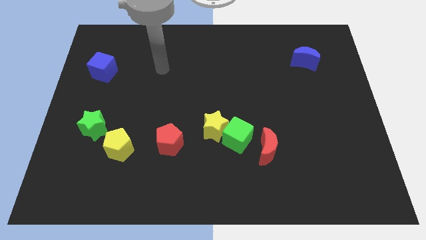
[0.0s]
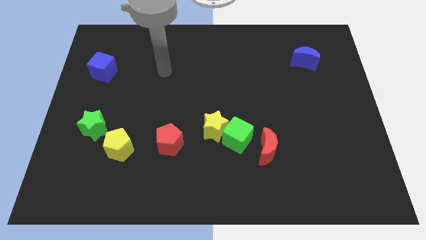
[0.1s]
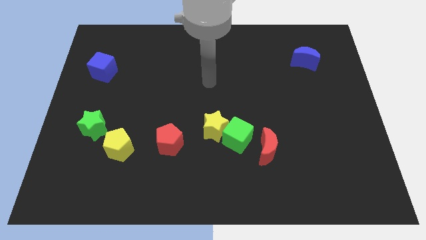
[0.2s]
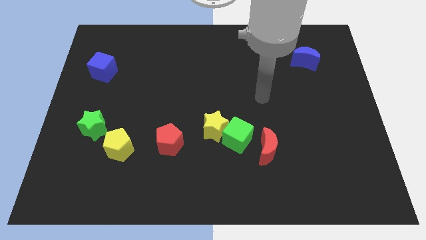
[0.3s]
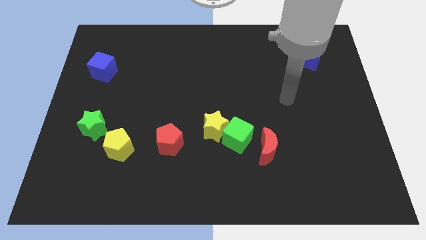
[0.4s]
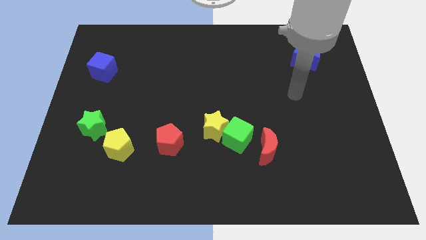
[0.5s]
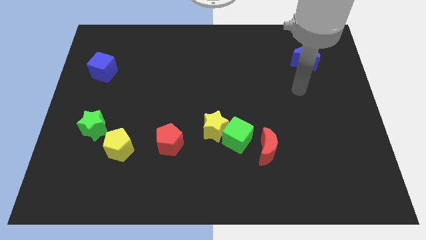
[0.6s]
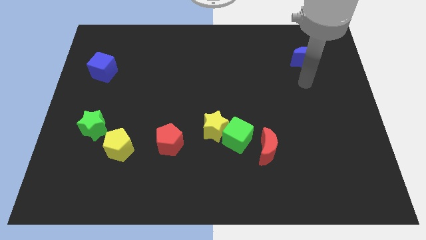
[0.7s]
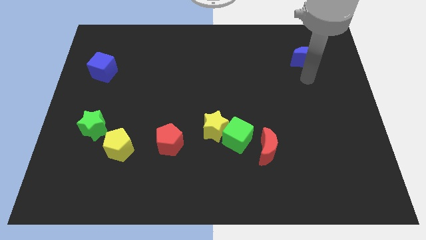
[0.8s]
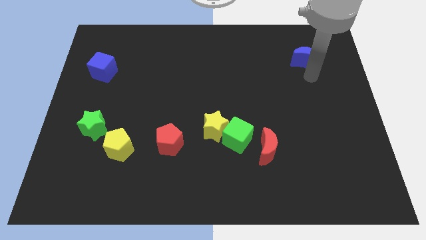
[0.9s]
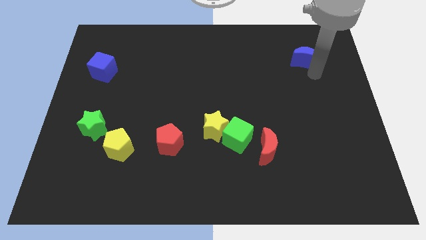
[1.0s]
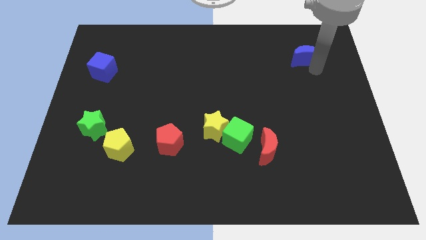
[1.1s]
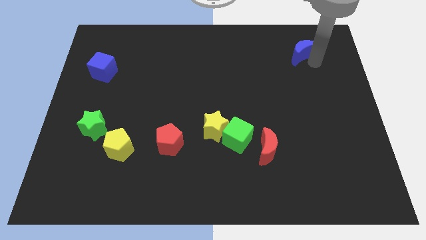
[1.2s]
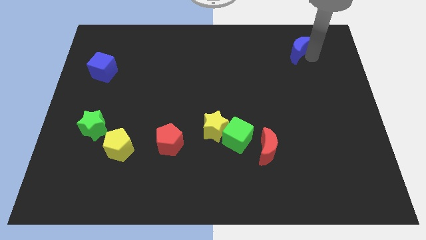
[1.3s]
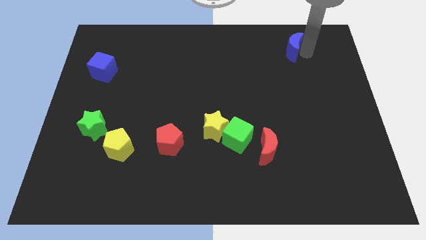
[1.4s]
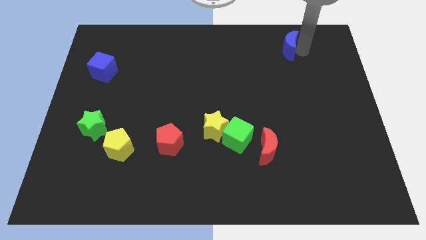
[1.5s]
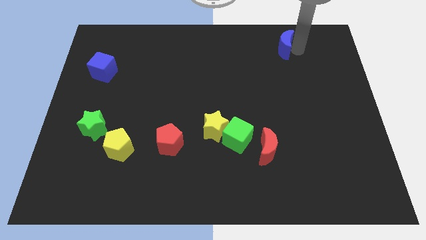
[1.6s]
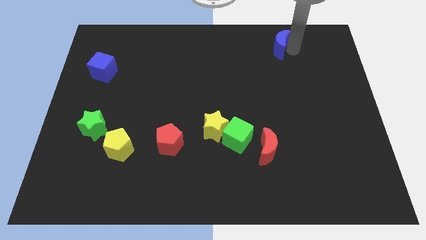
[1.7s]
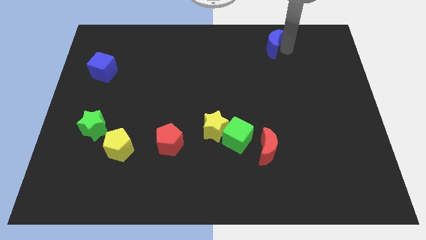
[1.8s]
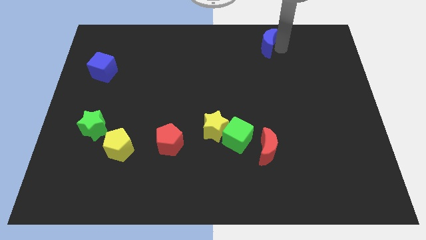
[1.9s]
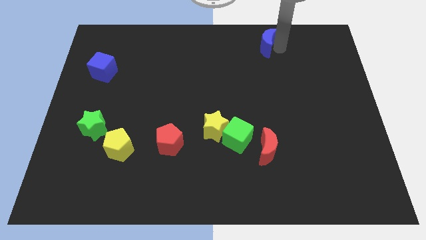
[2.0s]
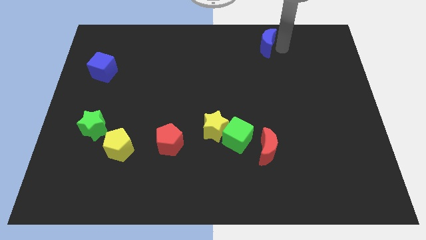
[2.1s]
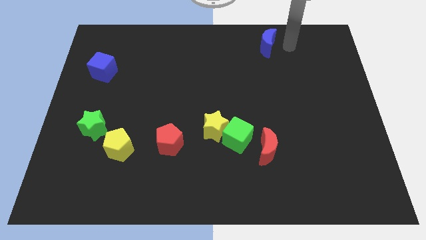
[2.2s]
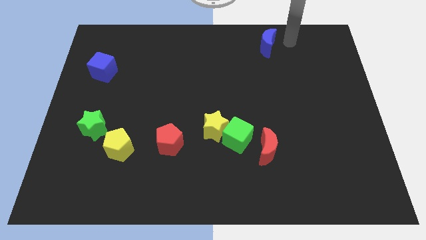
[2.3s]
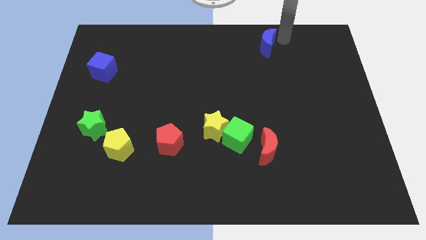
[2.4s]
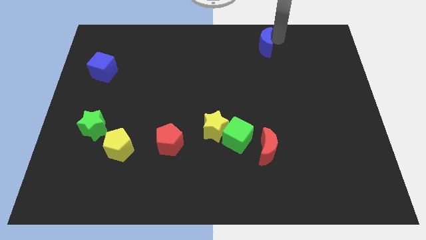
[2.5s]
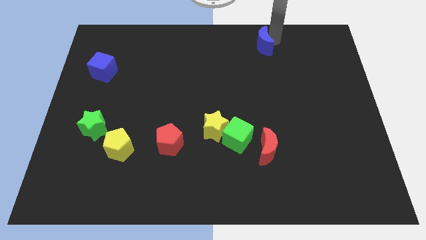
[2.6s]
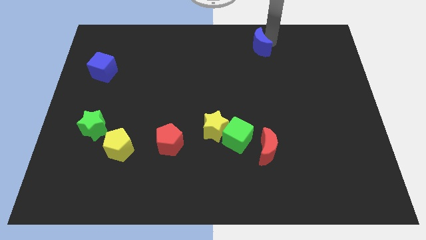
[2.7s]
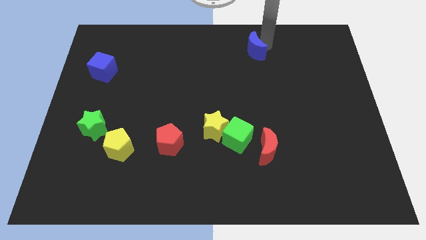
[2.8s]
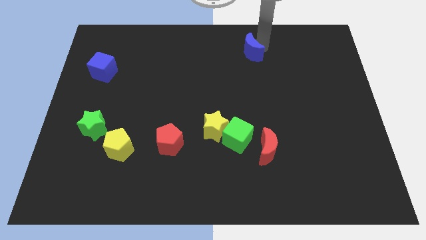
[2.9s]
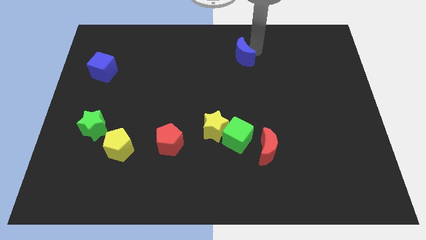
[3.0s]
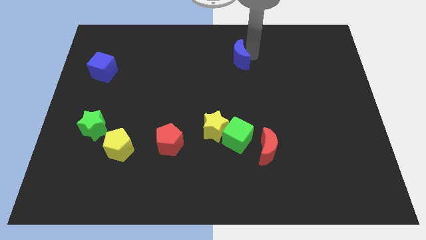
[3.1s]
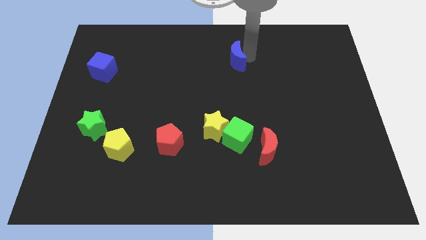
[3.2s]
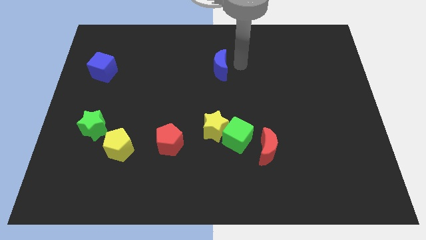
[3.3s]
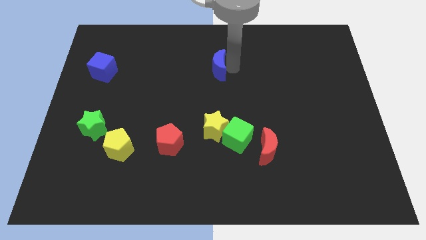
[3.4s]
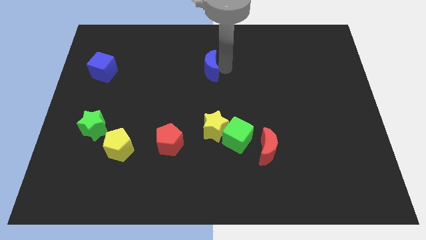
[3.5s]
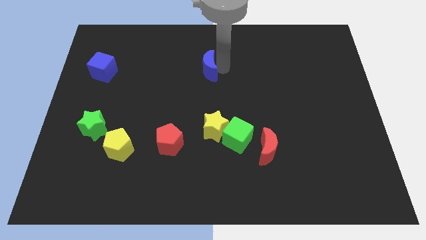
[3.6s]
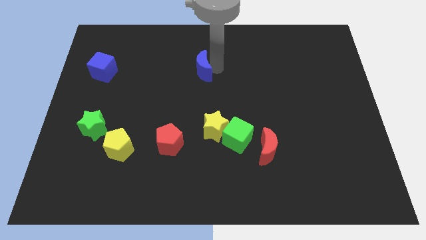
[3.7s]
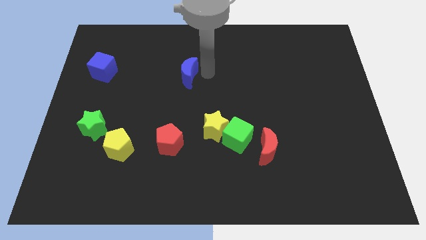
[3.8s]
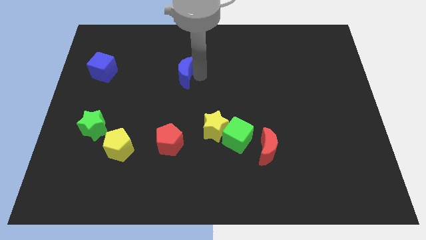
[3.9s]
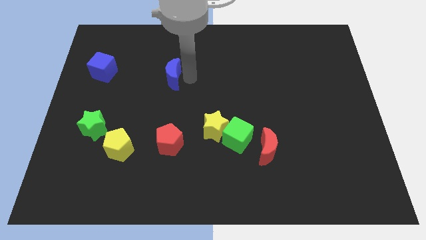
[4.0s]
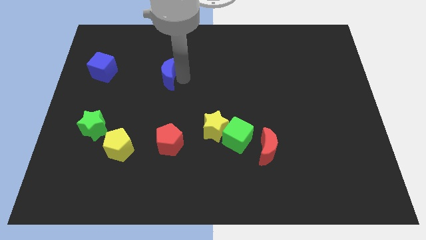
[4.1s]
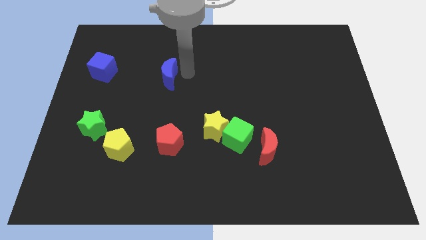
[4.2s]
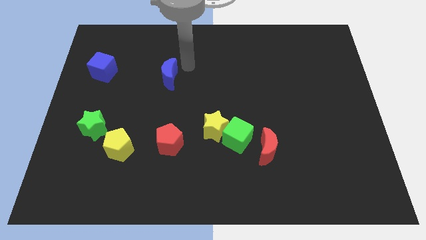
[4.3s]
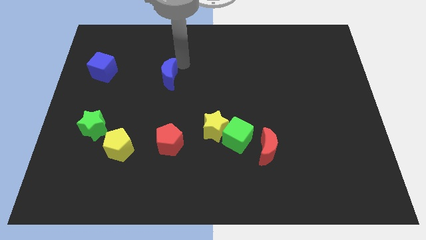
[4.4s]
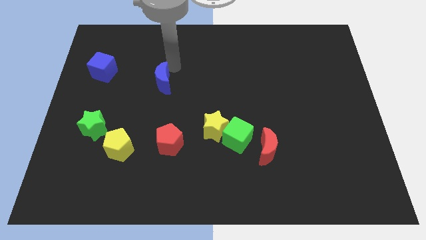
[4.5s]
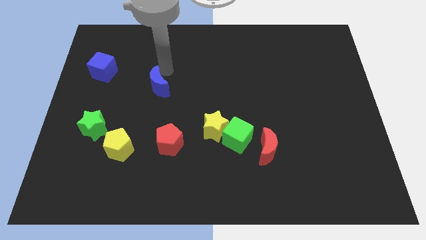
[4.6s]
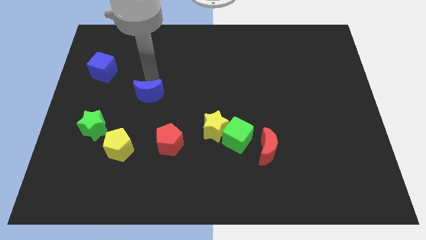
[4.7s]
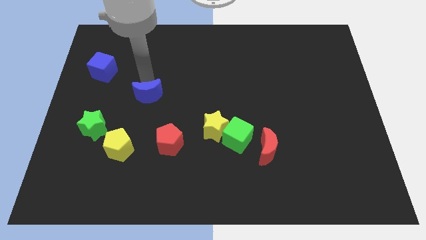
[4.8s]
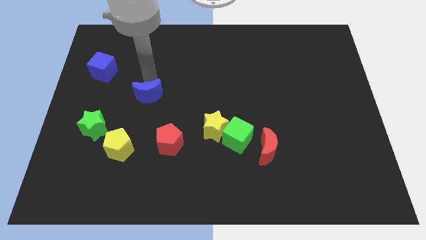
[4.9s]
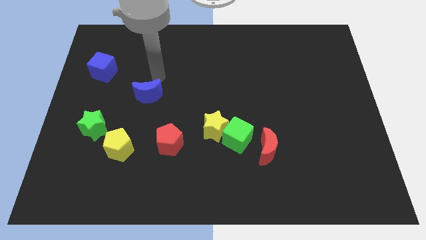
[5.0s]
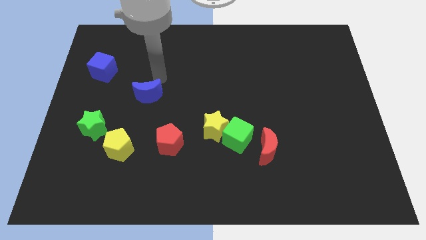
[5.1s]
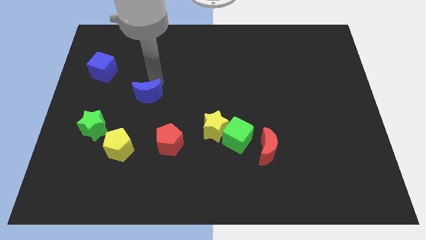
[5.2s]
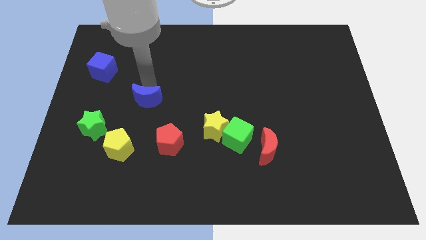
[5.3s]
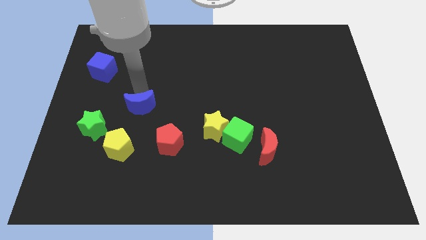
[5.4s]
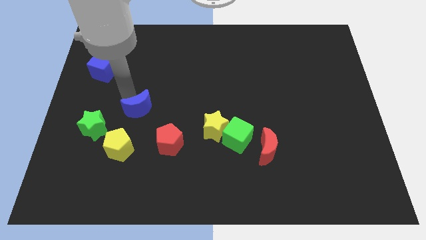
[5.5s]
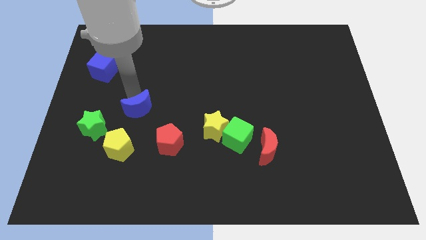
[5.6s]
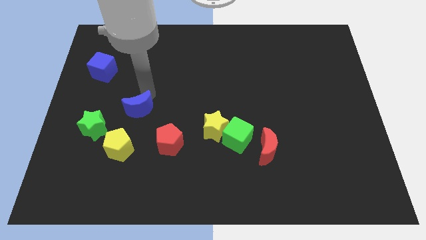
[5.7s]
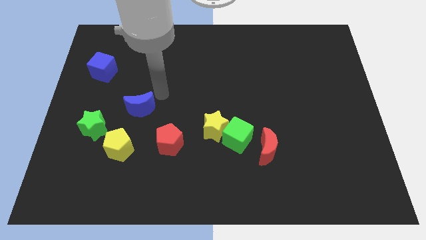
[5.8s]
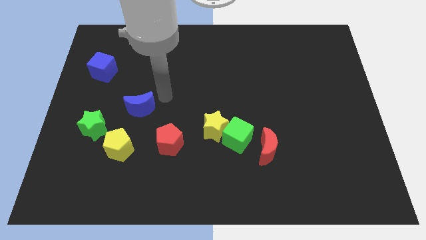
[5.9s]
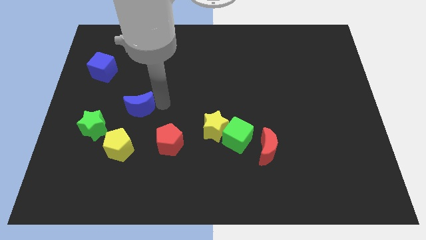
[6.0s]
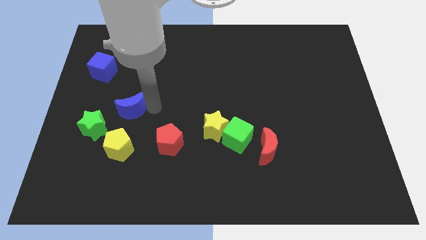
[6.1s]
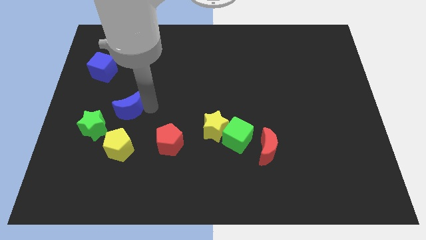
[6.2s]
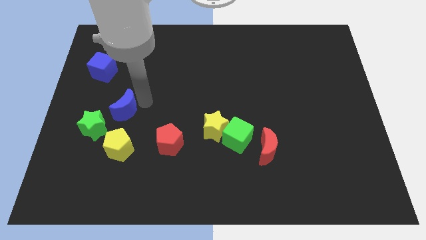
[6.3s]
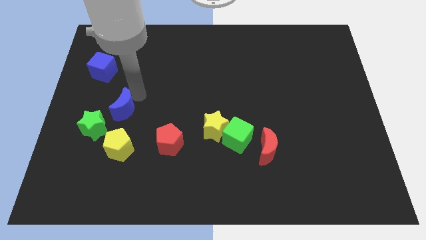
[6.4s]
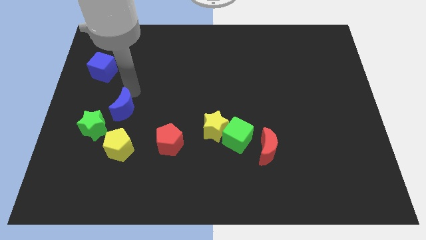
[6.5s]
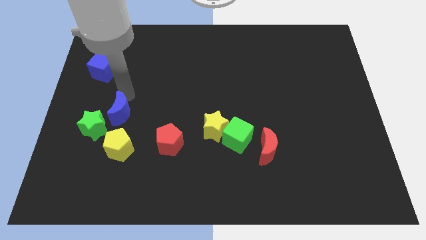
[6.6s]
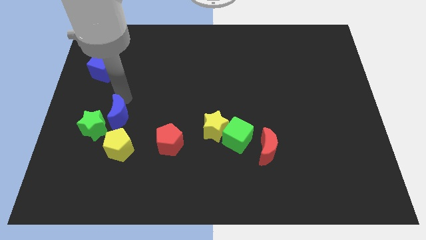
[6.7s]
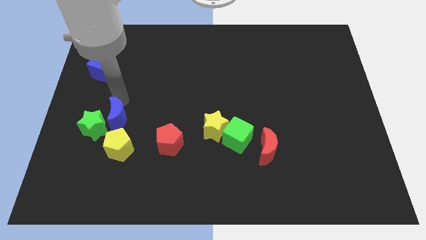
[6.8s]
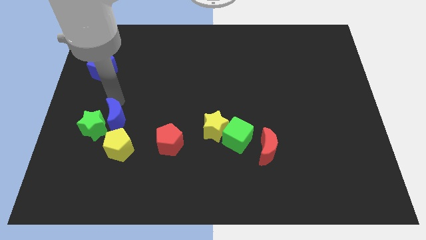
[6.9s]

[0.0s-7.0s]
put the blue moon towards the green star

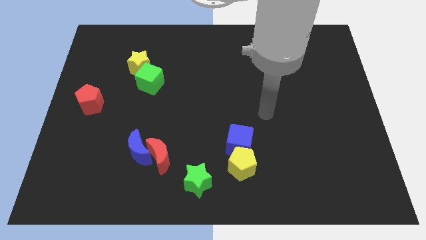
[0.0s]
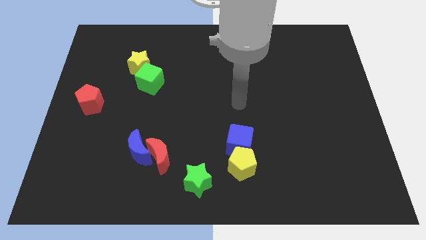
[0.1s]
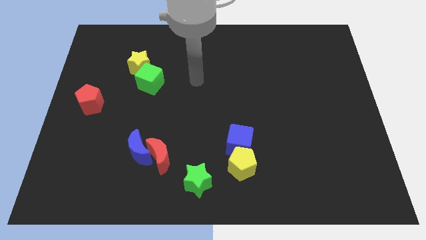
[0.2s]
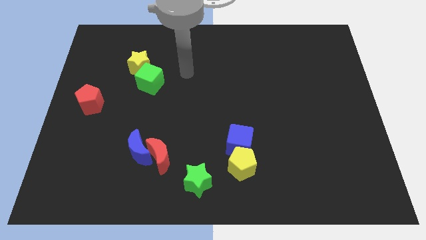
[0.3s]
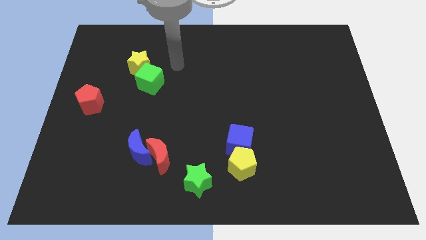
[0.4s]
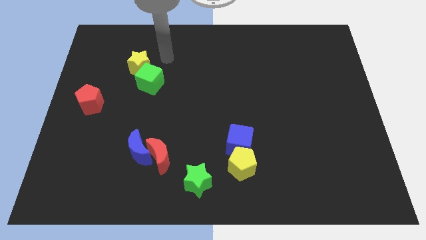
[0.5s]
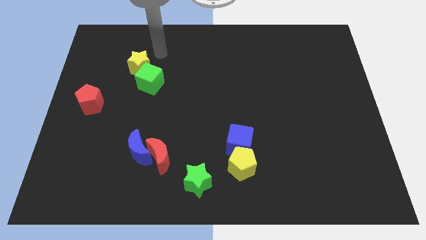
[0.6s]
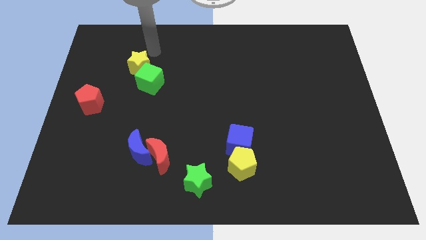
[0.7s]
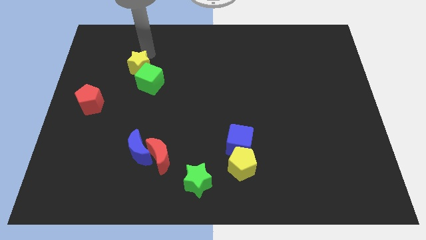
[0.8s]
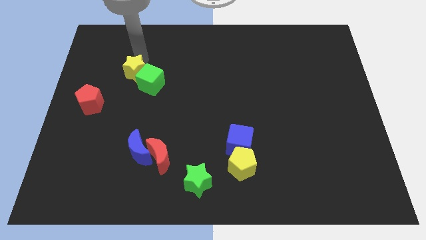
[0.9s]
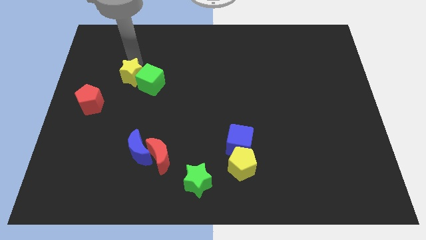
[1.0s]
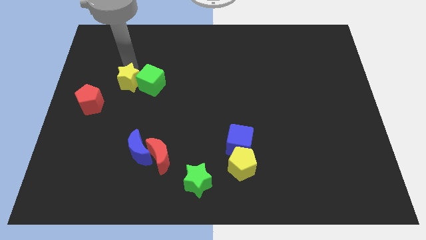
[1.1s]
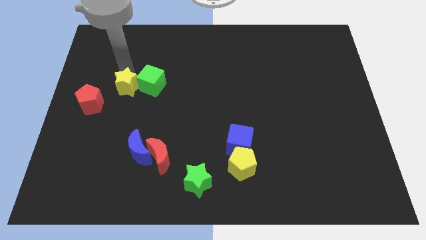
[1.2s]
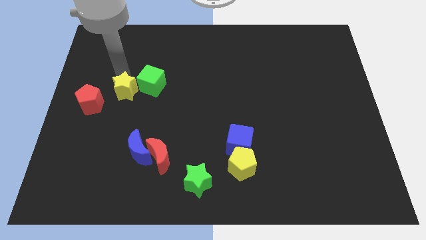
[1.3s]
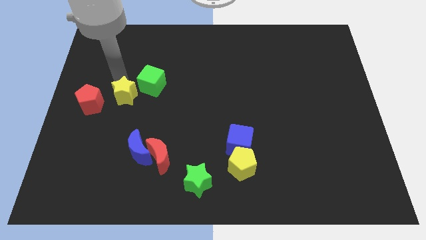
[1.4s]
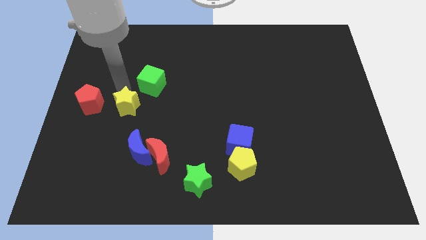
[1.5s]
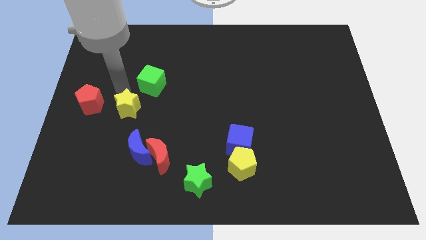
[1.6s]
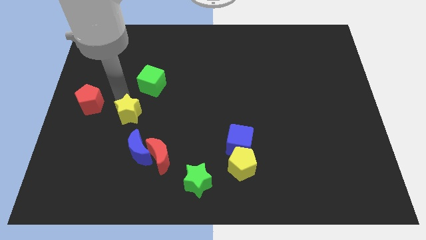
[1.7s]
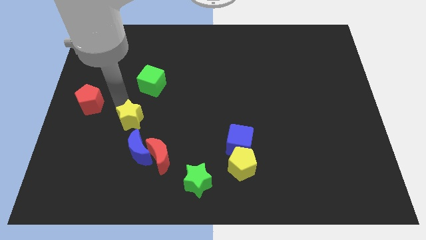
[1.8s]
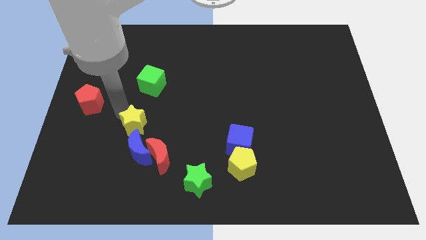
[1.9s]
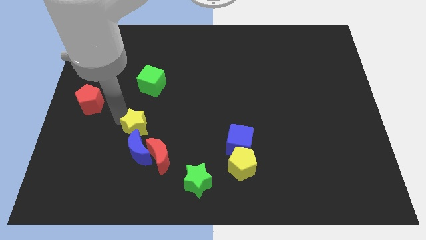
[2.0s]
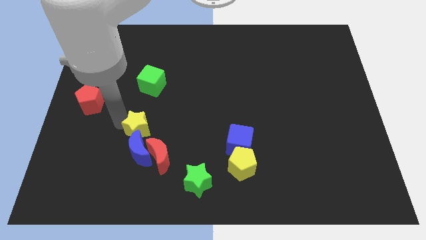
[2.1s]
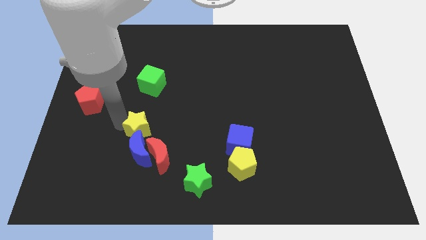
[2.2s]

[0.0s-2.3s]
slide the yellow star close to the blue moon
